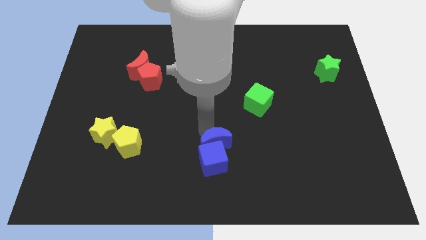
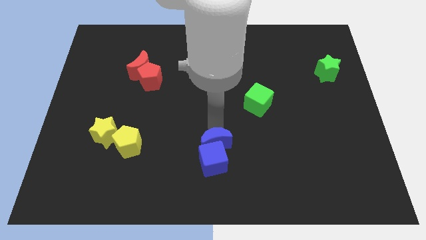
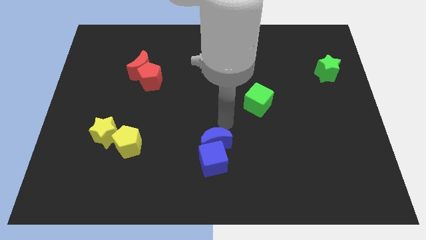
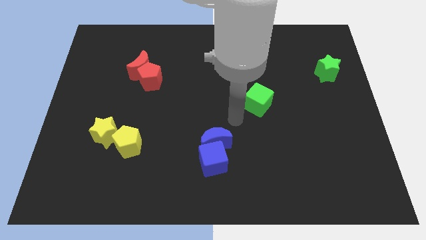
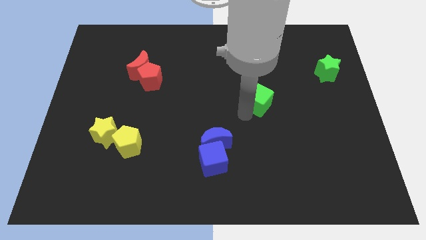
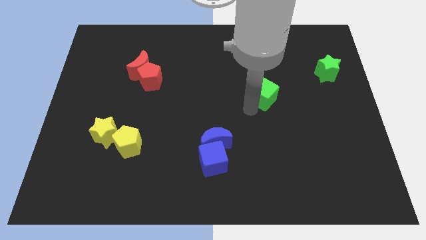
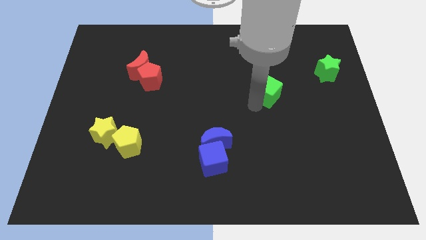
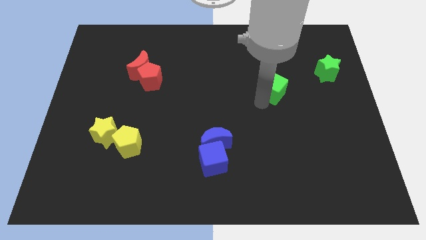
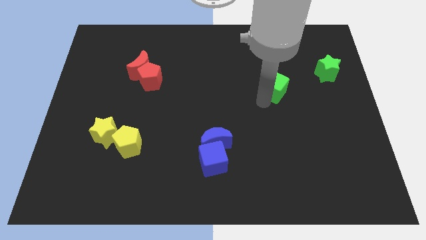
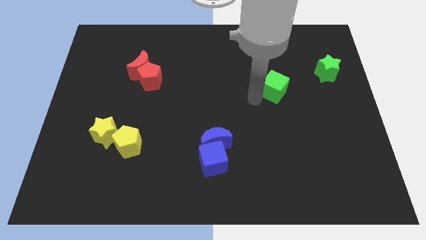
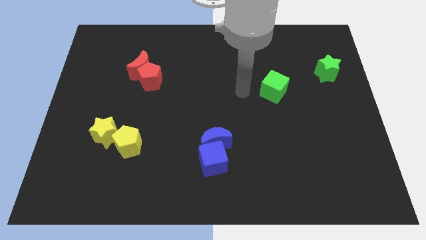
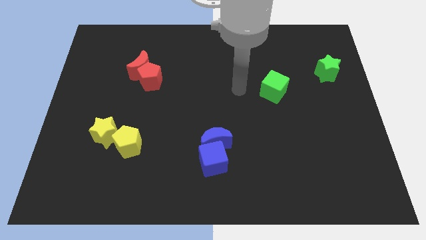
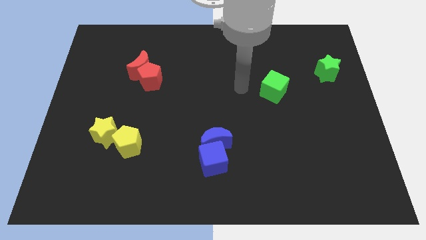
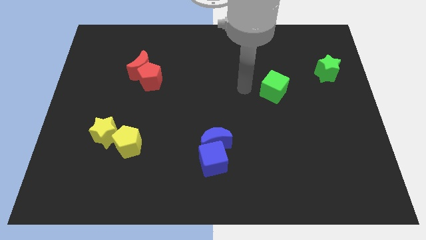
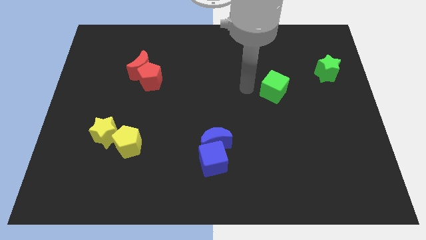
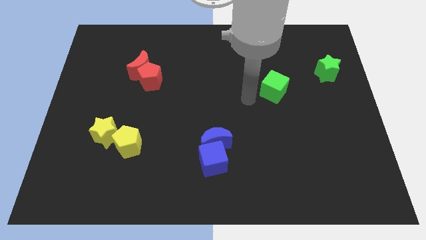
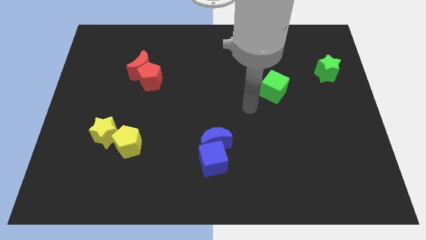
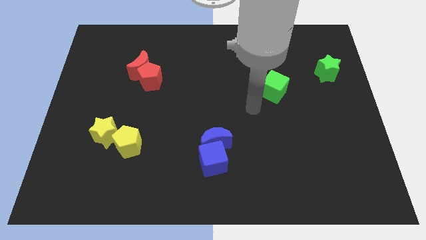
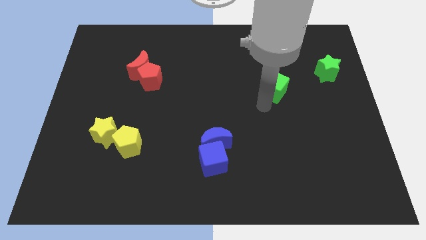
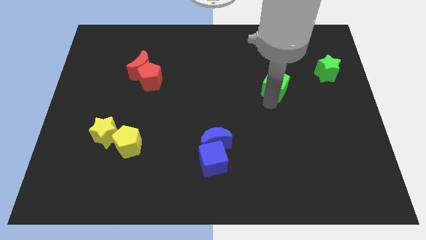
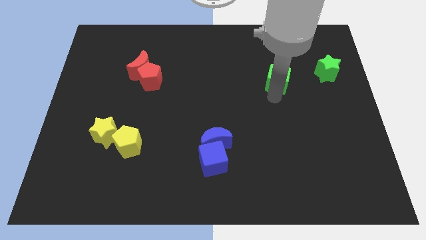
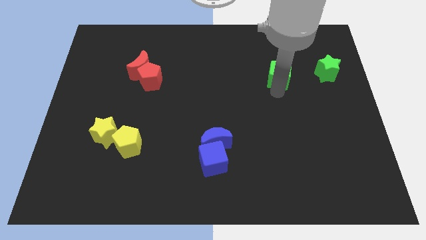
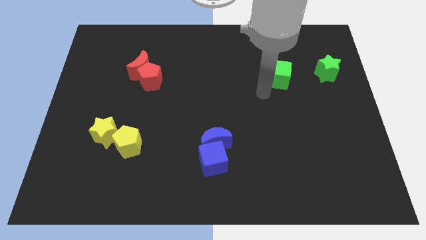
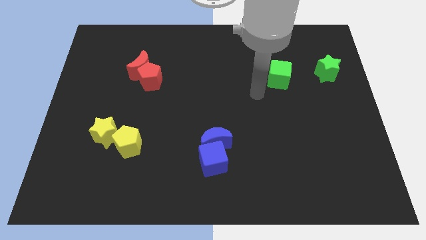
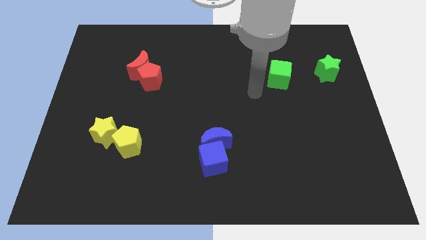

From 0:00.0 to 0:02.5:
push the green cube to the left side of the green star

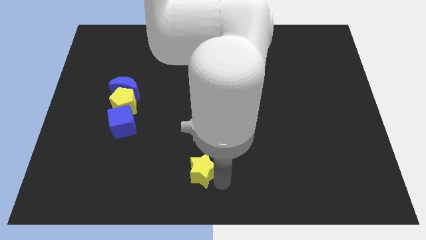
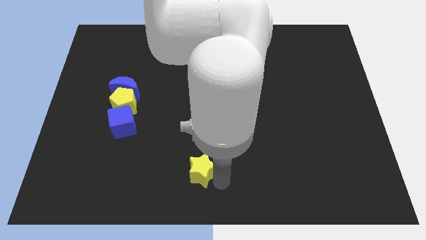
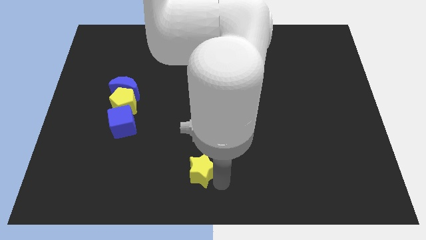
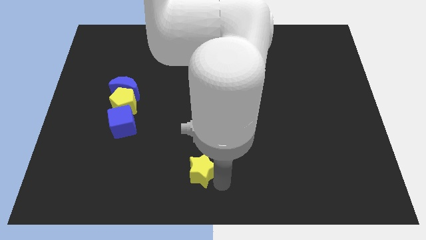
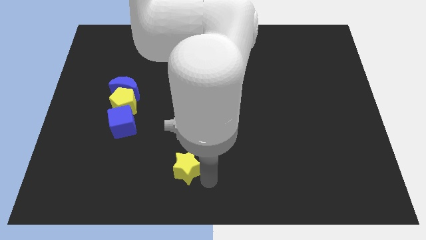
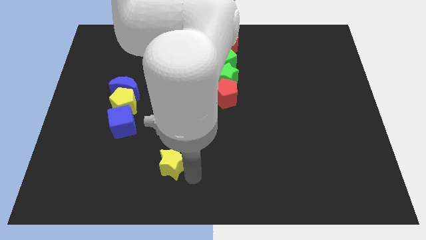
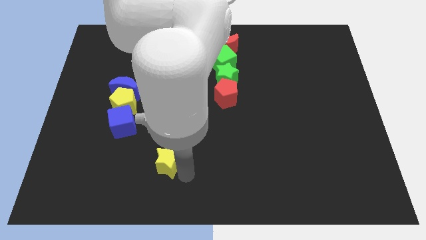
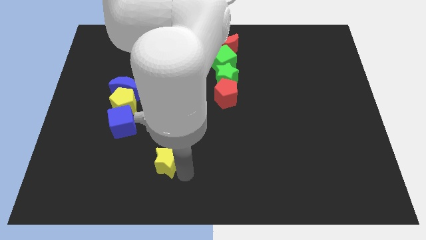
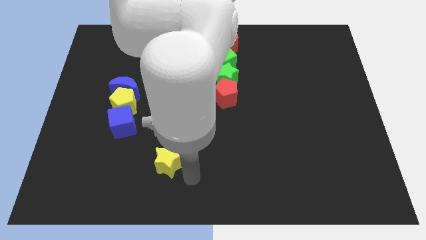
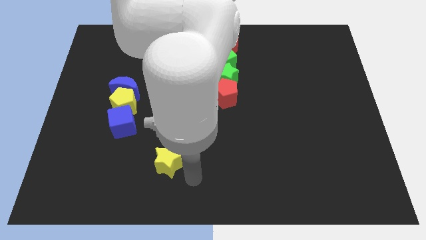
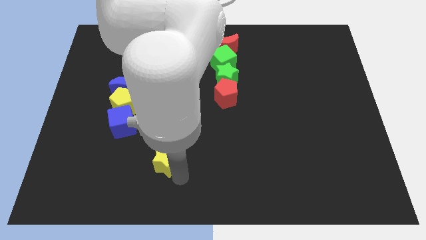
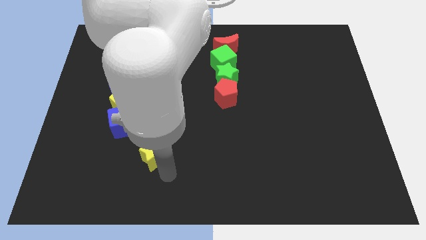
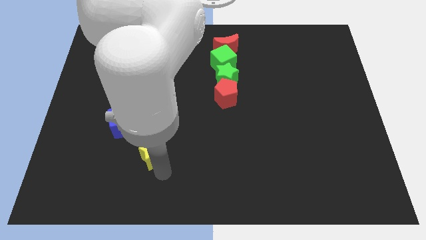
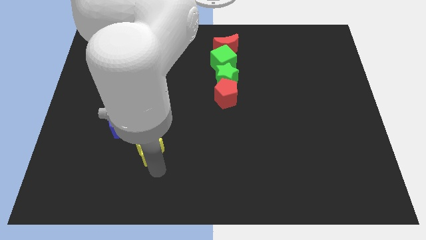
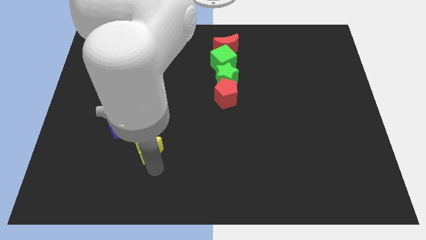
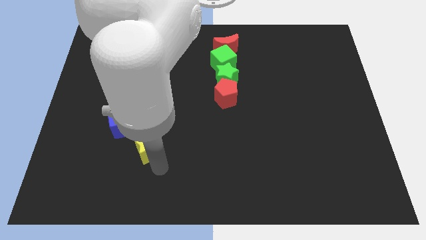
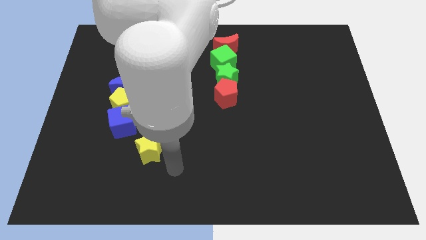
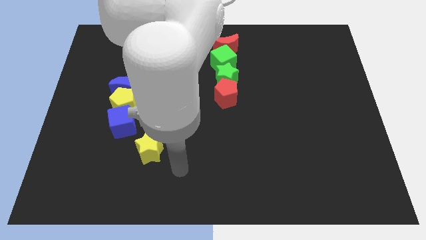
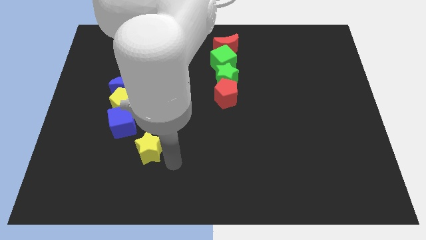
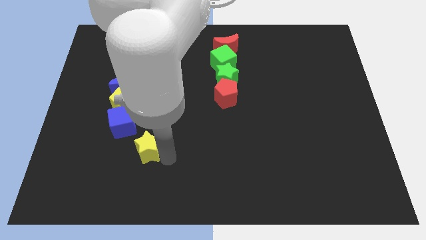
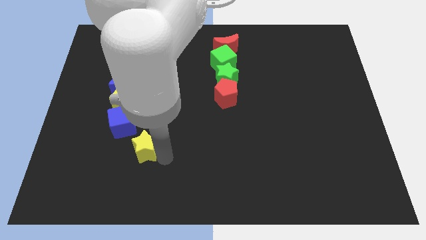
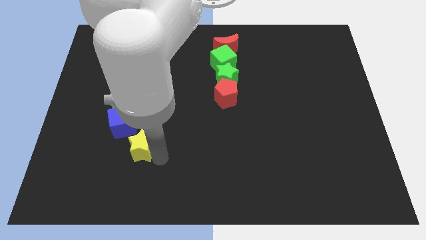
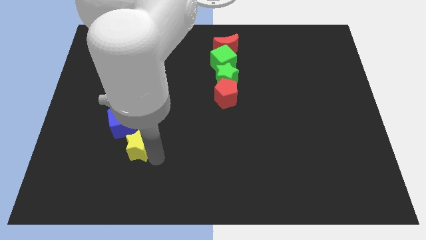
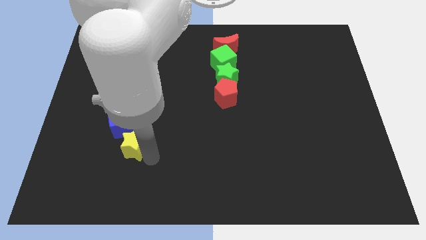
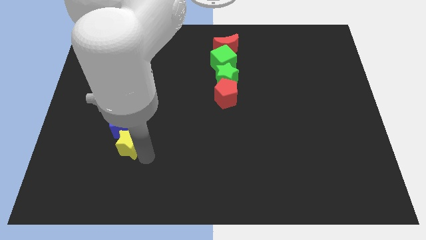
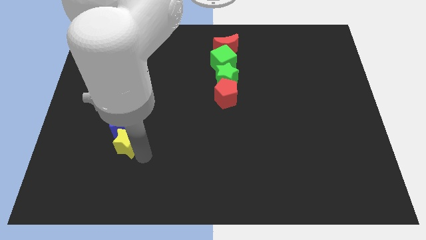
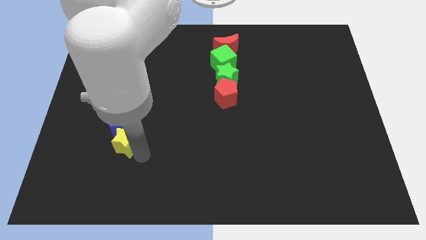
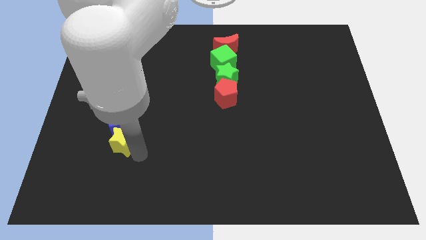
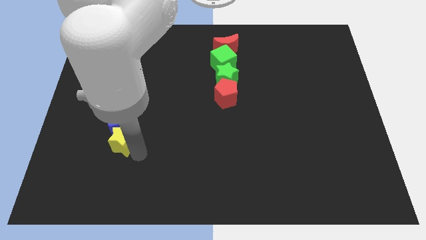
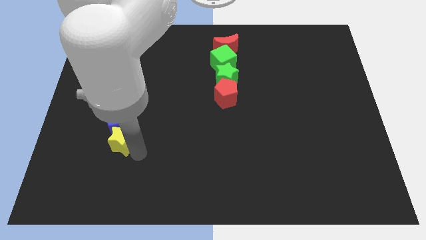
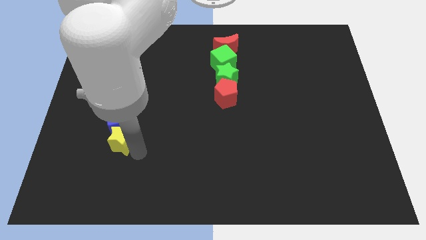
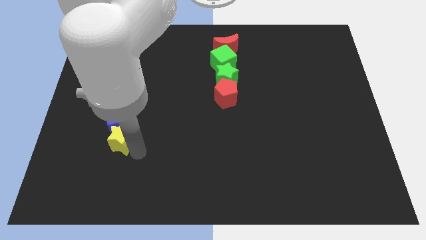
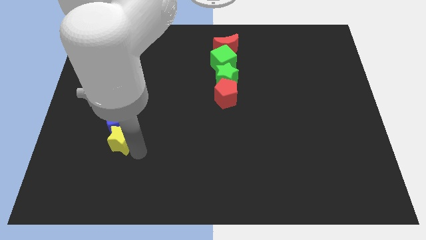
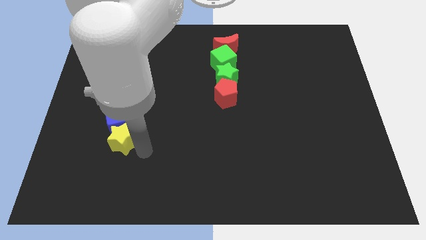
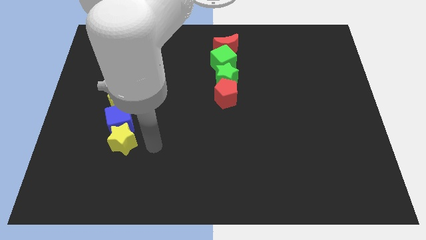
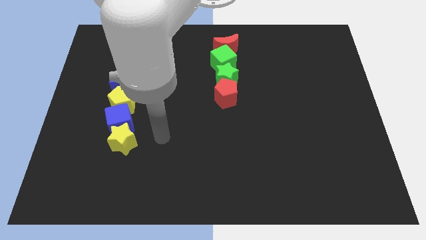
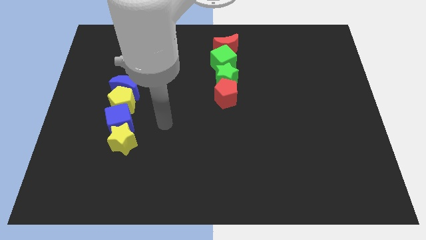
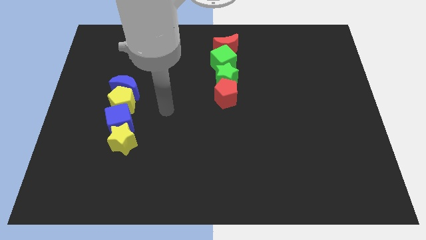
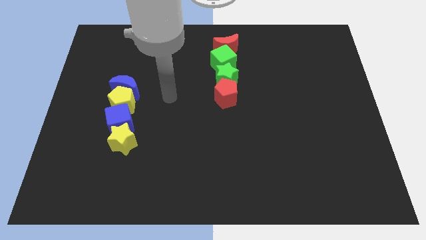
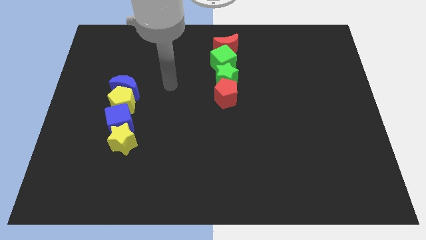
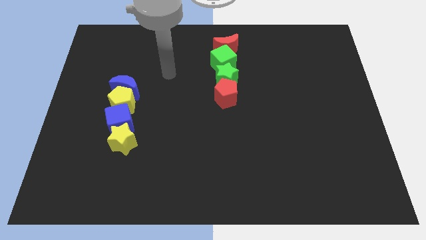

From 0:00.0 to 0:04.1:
place the yellow star to bottom of the blue cube

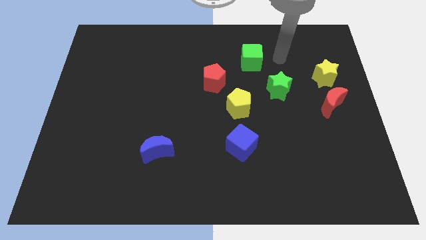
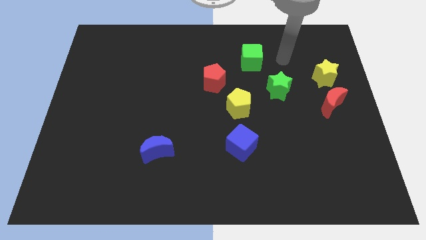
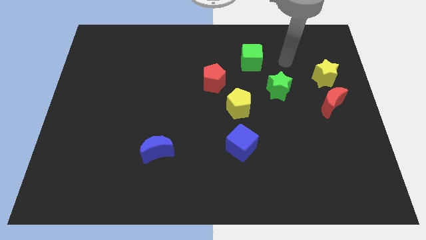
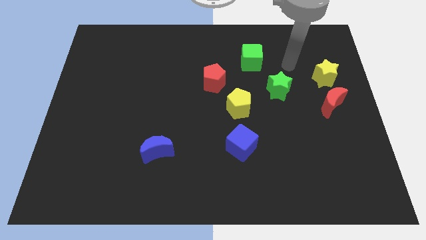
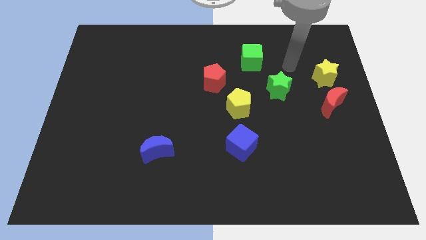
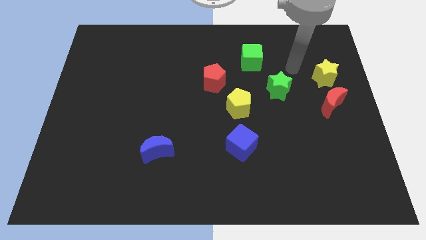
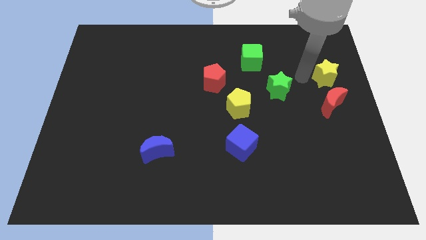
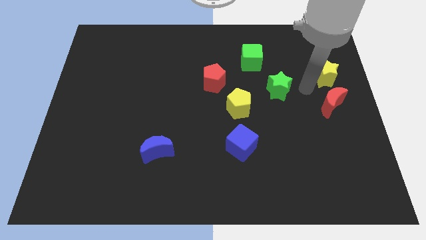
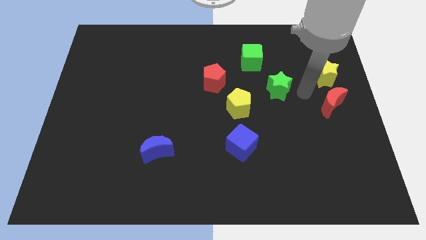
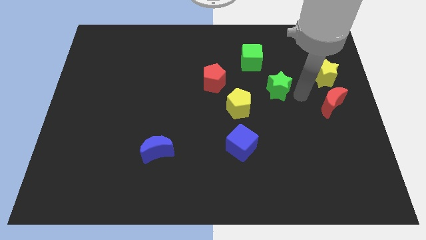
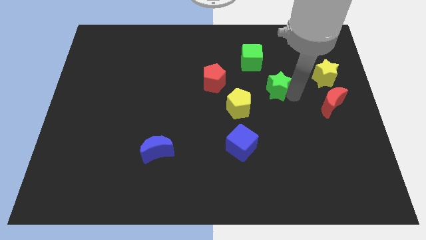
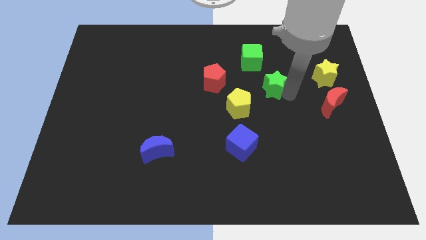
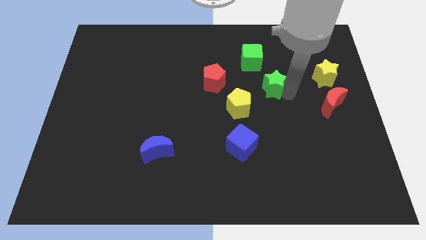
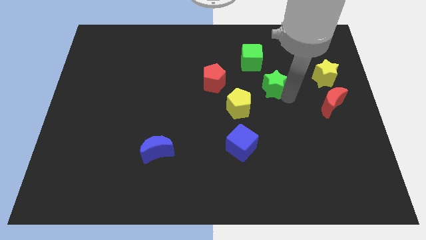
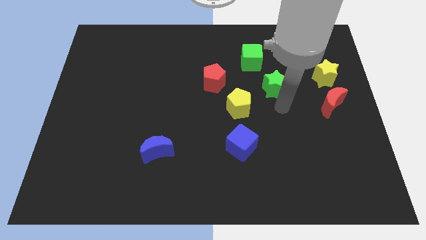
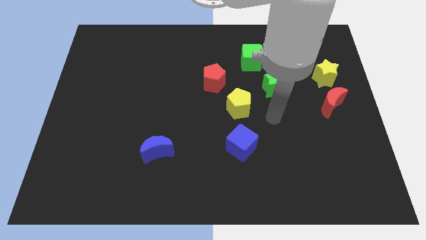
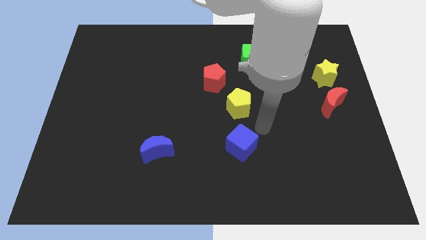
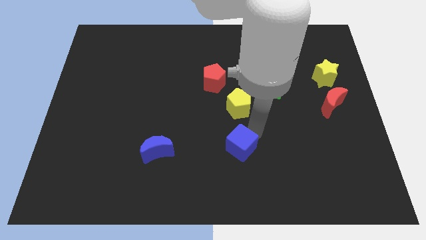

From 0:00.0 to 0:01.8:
slightly push the green star towards yellow pentagon

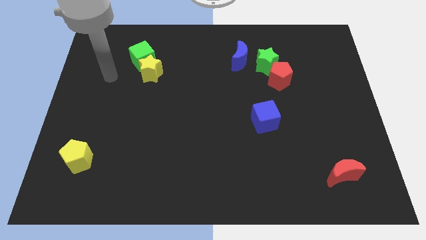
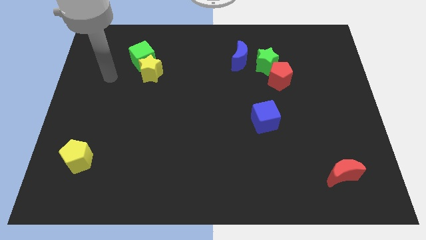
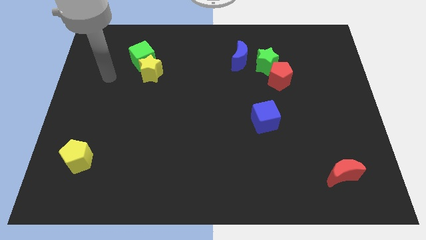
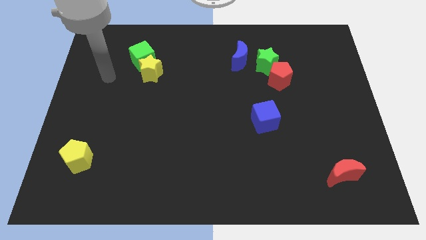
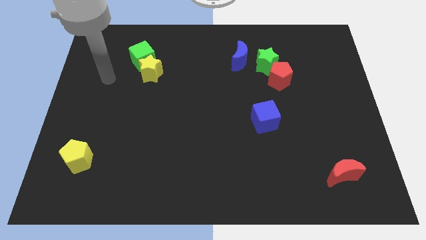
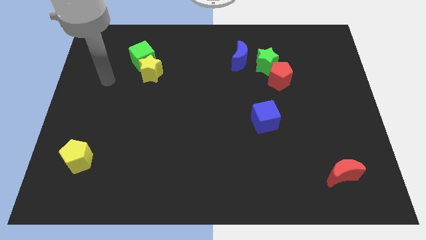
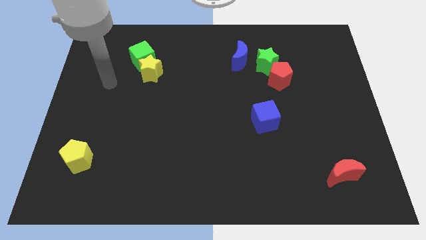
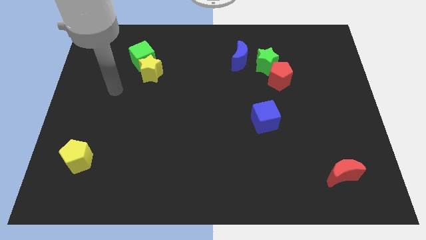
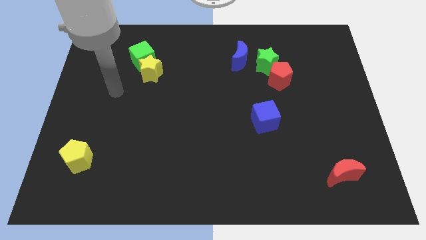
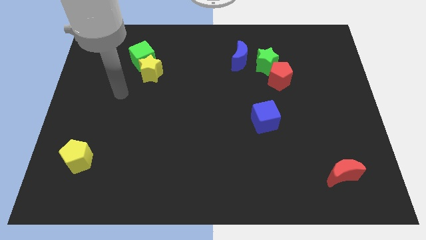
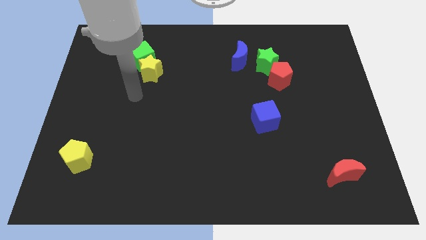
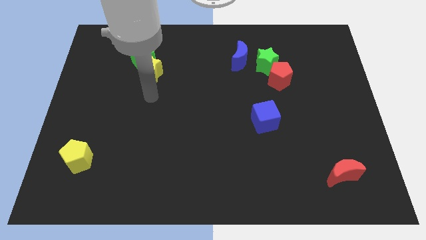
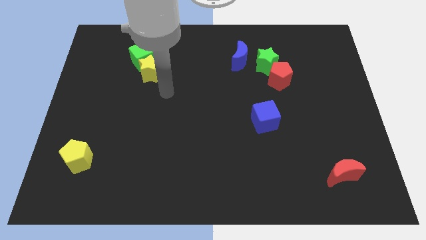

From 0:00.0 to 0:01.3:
move yourself to the bottom of the yellow star
